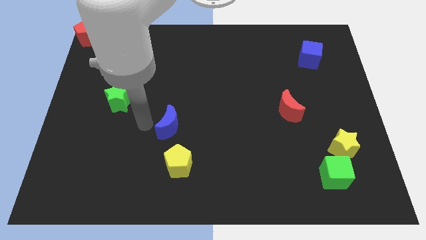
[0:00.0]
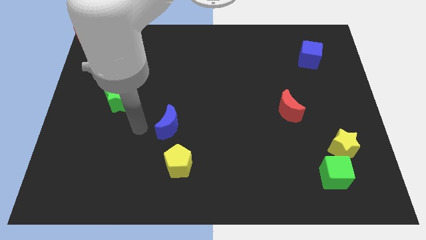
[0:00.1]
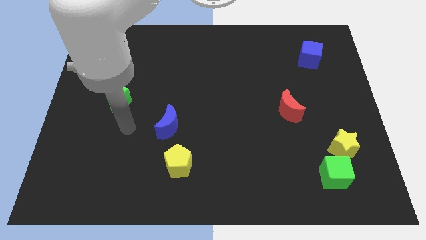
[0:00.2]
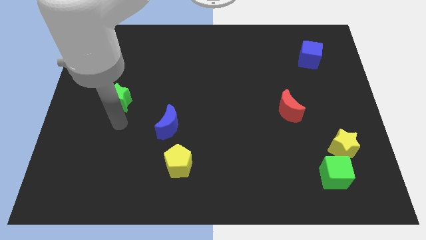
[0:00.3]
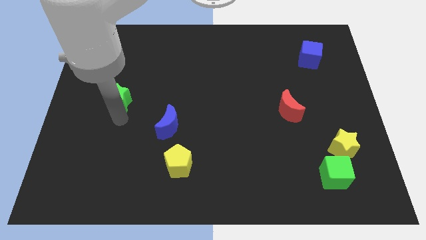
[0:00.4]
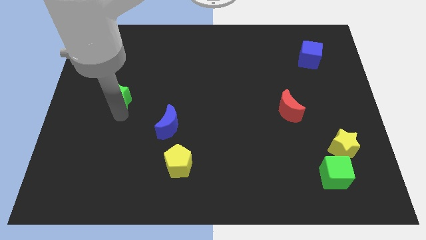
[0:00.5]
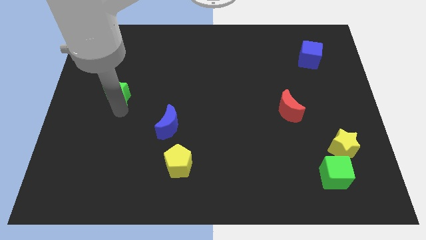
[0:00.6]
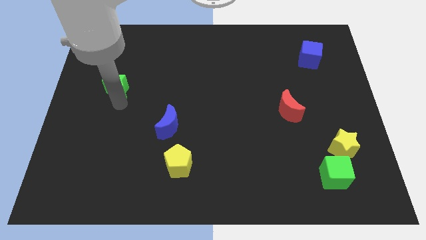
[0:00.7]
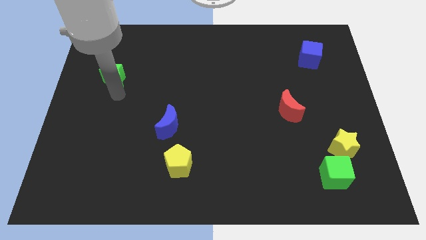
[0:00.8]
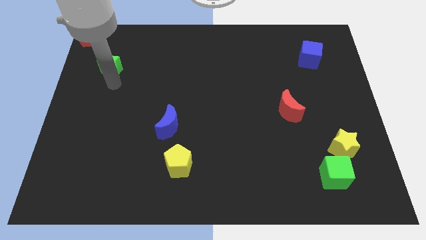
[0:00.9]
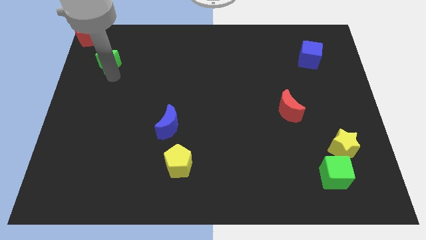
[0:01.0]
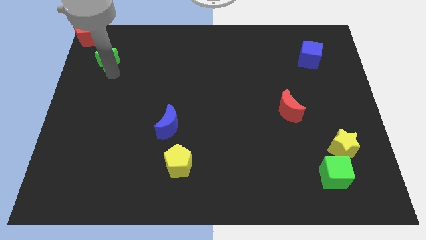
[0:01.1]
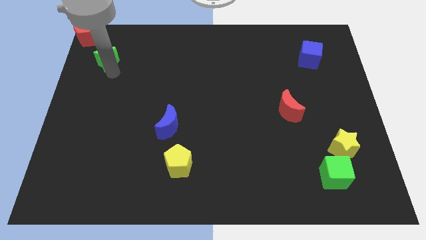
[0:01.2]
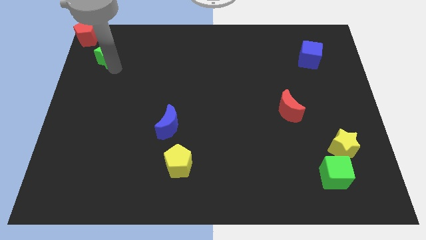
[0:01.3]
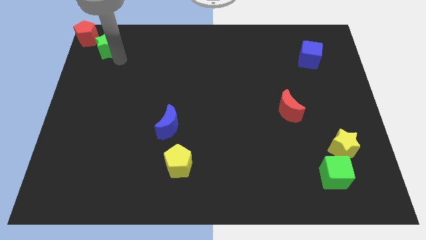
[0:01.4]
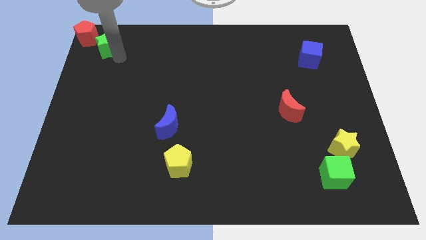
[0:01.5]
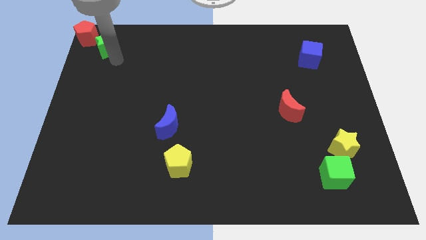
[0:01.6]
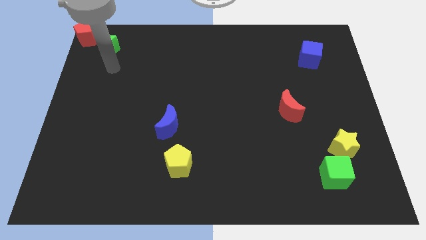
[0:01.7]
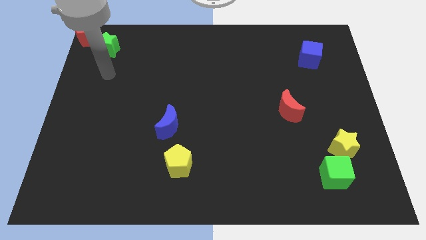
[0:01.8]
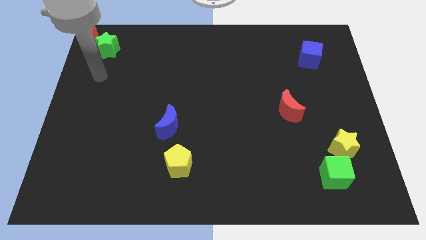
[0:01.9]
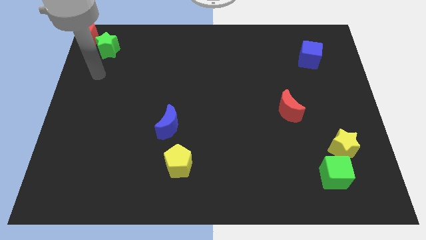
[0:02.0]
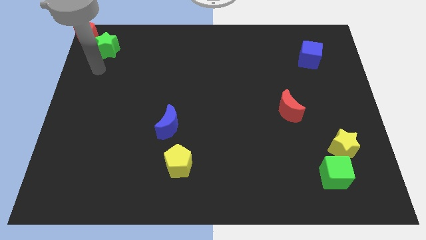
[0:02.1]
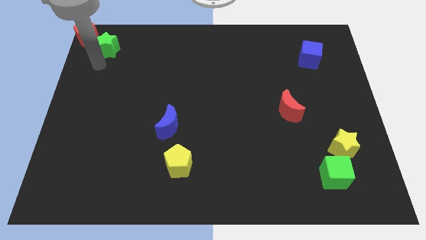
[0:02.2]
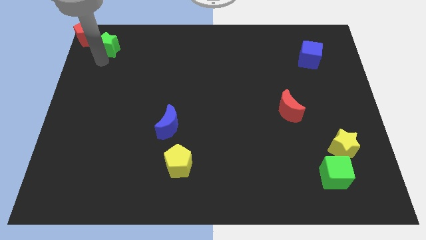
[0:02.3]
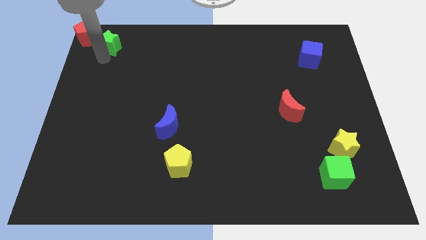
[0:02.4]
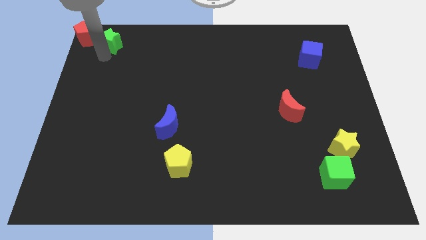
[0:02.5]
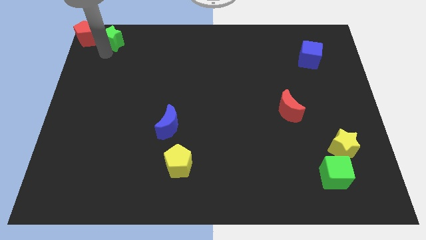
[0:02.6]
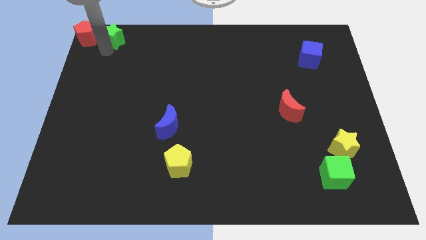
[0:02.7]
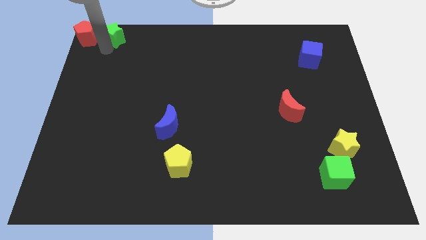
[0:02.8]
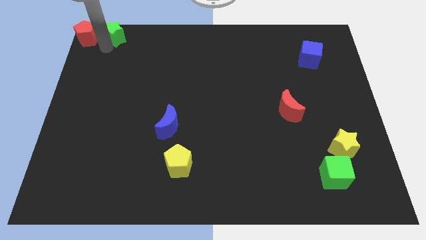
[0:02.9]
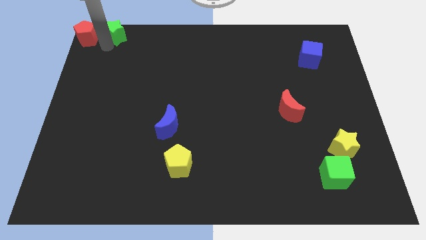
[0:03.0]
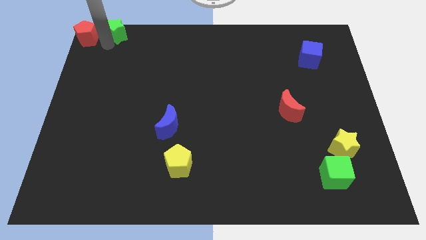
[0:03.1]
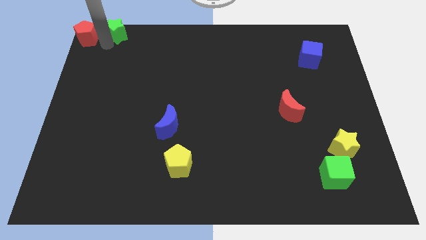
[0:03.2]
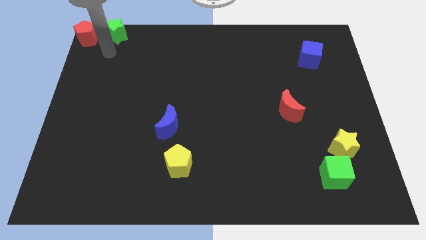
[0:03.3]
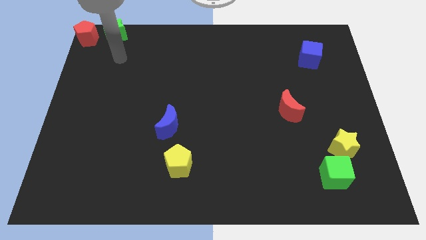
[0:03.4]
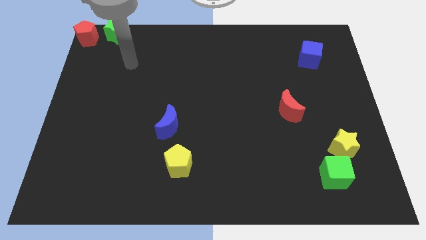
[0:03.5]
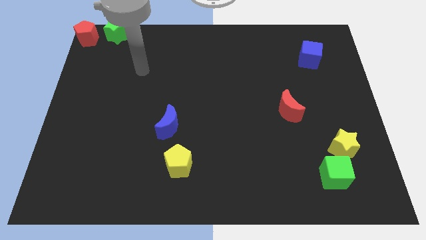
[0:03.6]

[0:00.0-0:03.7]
push the green star horizontally to the right side of the red pentagon

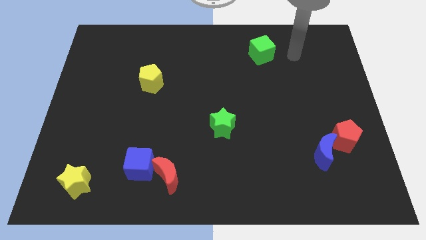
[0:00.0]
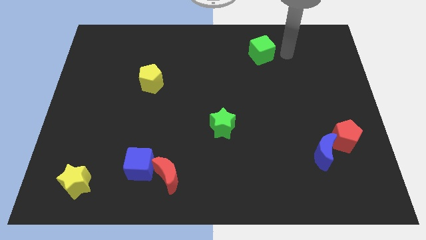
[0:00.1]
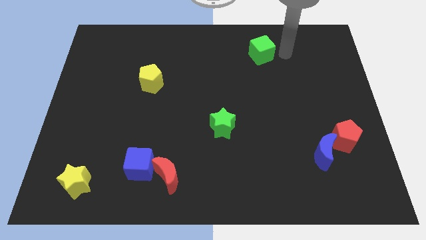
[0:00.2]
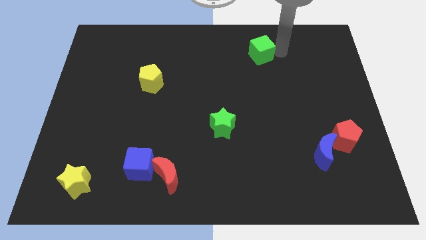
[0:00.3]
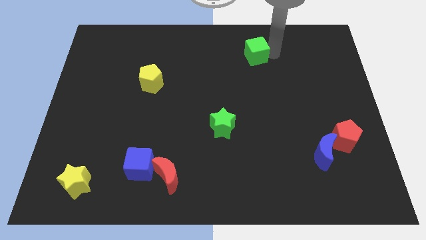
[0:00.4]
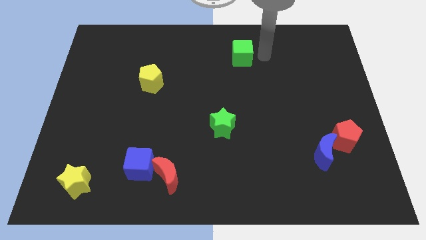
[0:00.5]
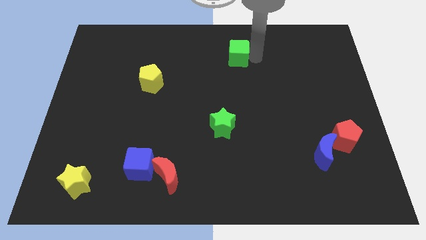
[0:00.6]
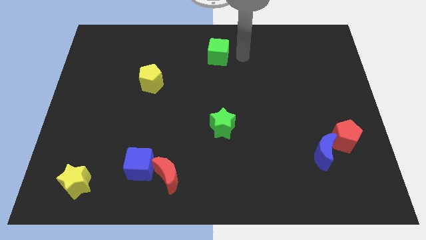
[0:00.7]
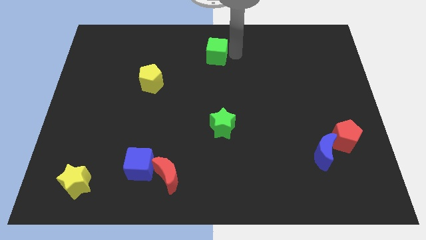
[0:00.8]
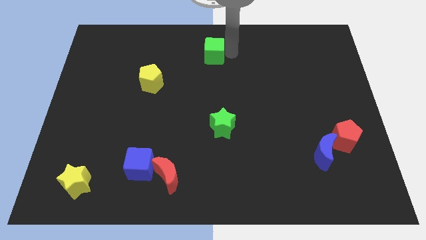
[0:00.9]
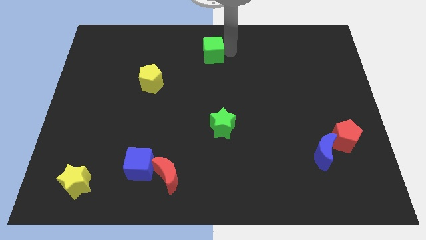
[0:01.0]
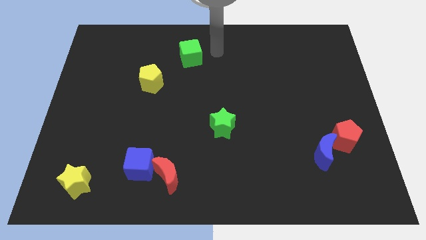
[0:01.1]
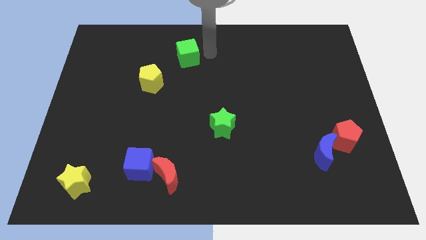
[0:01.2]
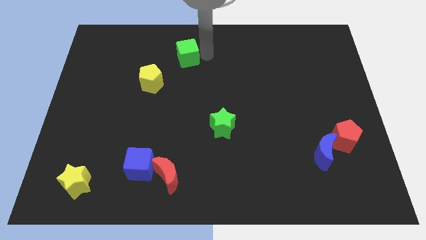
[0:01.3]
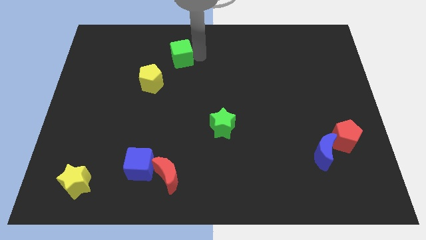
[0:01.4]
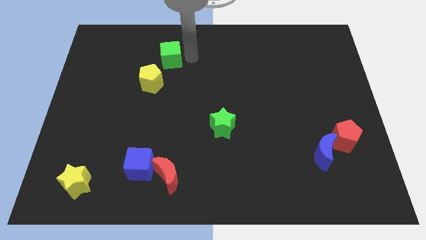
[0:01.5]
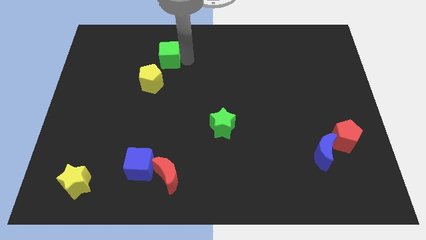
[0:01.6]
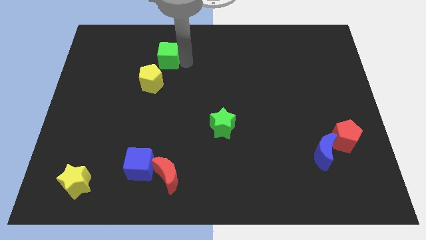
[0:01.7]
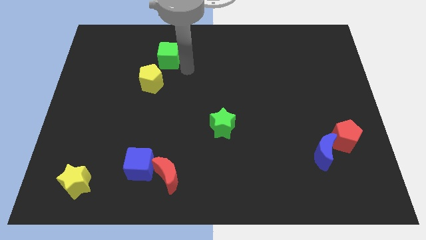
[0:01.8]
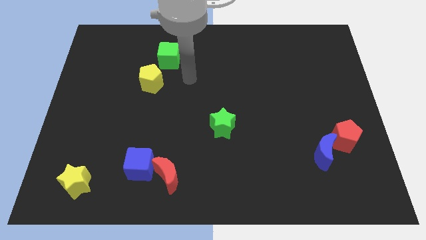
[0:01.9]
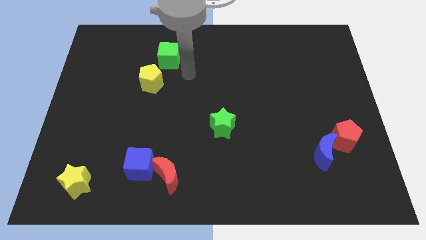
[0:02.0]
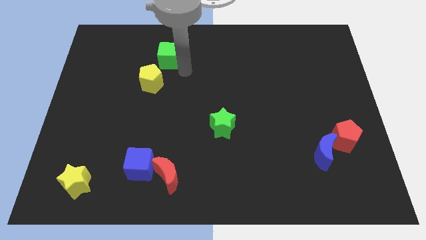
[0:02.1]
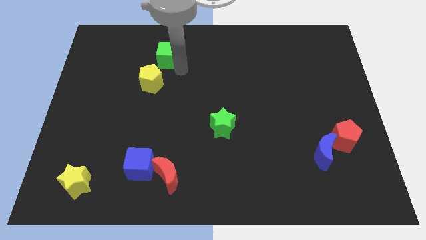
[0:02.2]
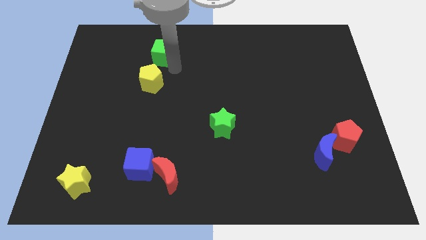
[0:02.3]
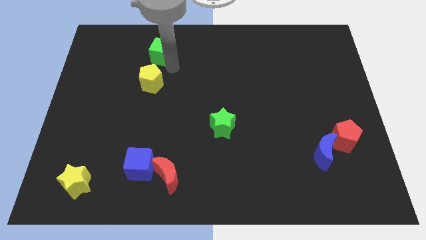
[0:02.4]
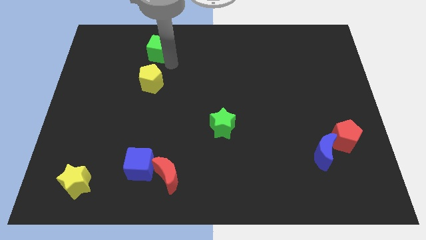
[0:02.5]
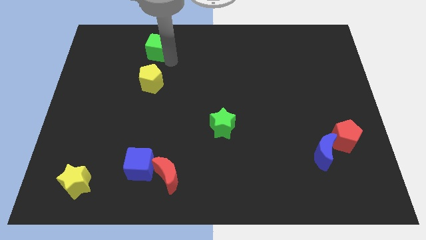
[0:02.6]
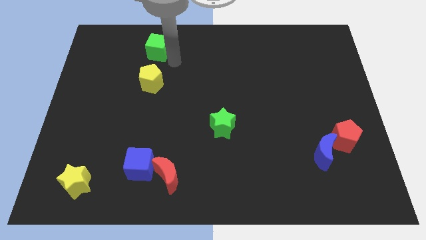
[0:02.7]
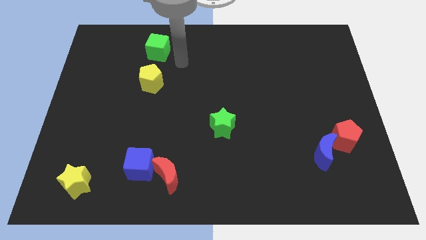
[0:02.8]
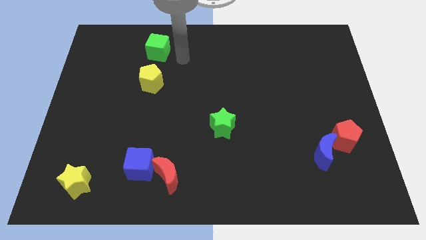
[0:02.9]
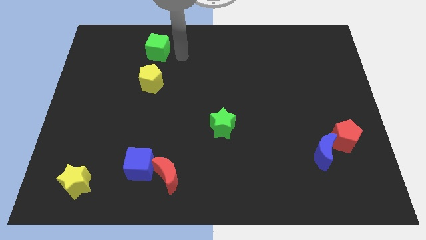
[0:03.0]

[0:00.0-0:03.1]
slide green cube on top of yellow pentagon

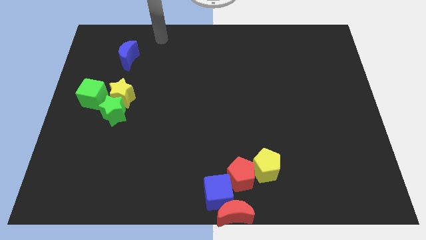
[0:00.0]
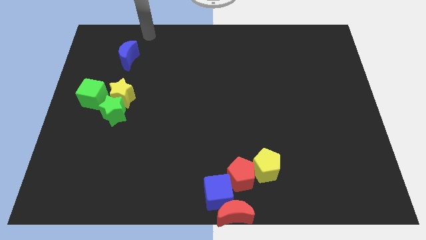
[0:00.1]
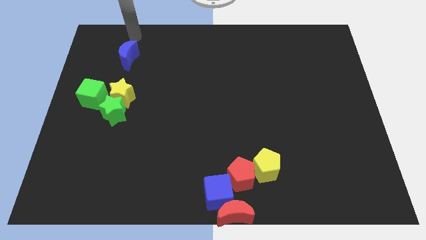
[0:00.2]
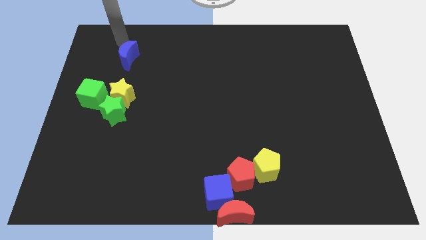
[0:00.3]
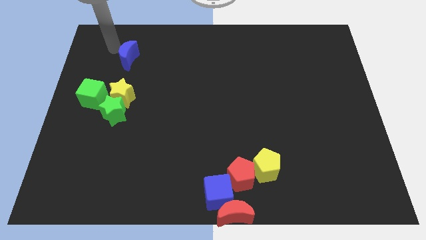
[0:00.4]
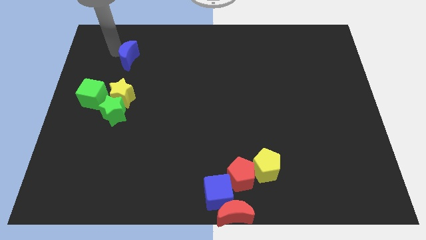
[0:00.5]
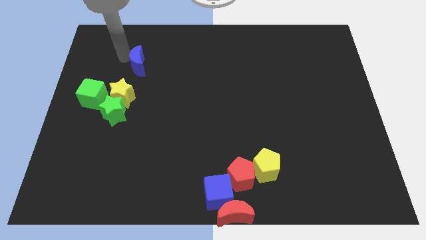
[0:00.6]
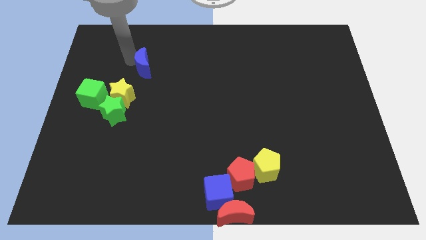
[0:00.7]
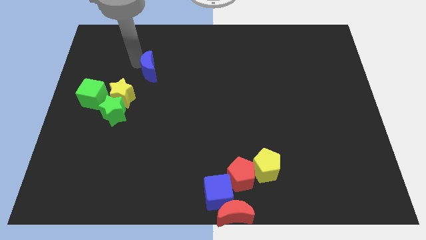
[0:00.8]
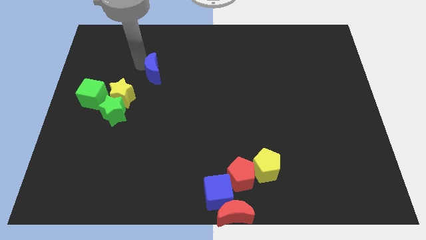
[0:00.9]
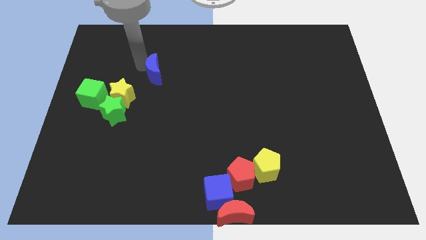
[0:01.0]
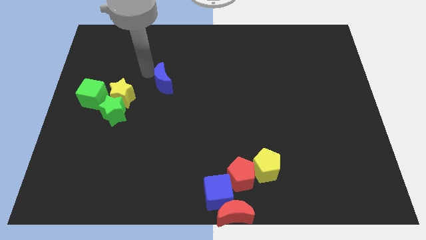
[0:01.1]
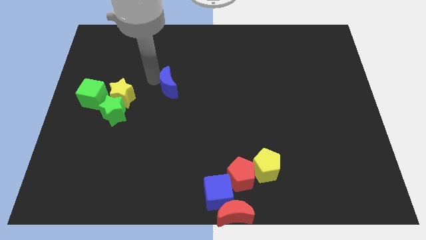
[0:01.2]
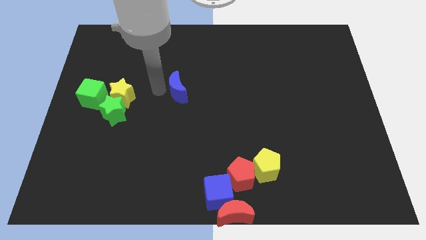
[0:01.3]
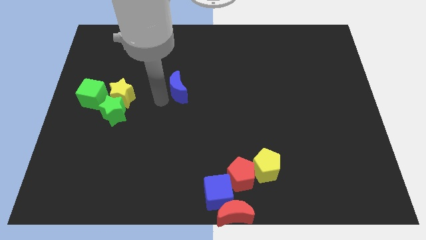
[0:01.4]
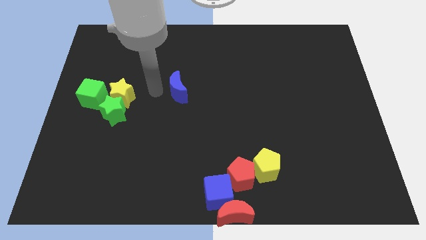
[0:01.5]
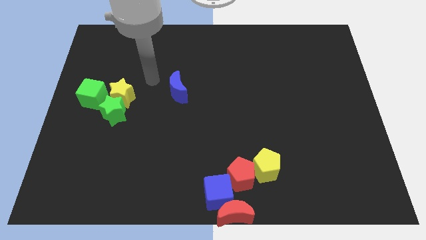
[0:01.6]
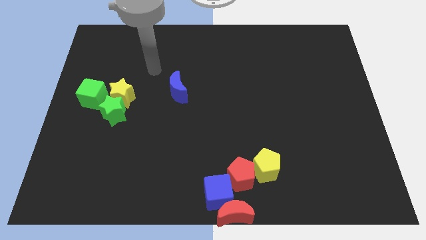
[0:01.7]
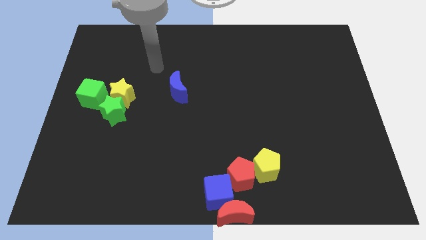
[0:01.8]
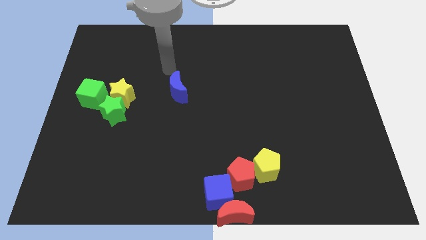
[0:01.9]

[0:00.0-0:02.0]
push the blue moon slightly towards the center of the board

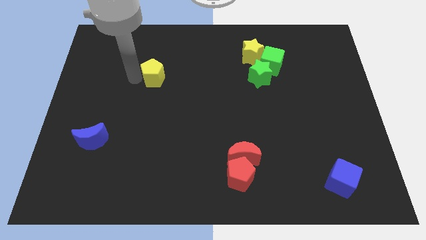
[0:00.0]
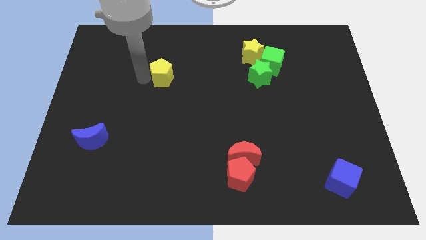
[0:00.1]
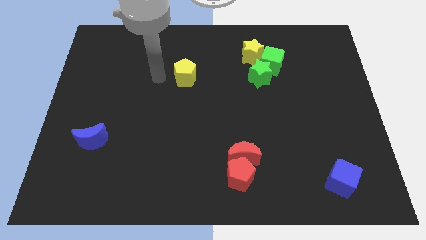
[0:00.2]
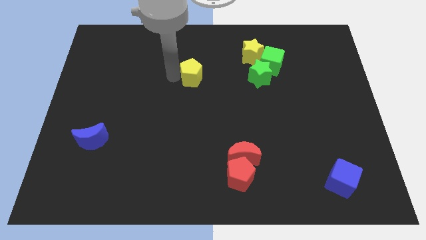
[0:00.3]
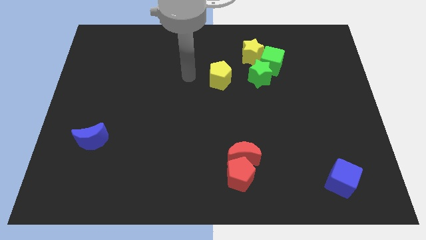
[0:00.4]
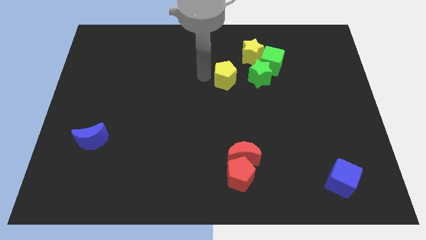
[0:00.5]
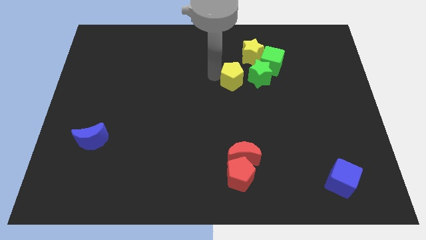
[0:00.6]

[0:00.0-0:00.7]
push the yellow pentagon closer to the green star
